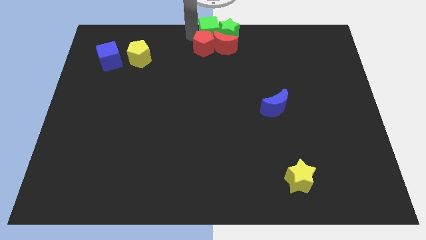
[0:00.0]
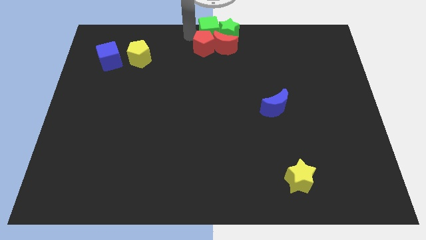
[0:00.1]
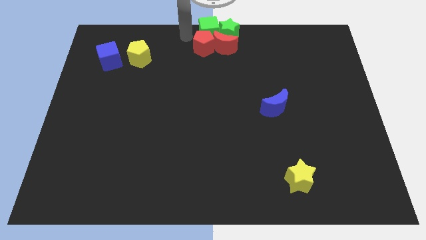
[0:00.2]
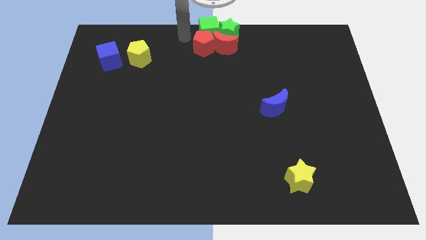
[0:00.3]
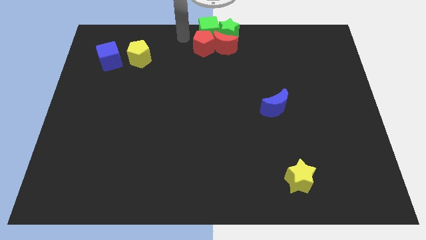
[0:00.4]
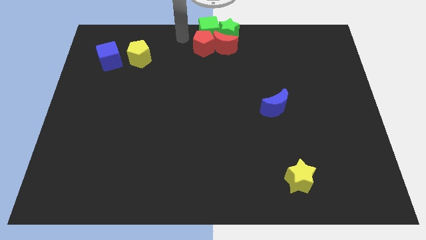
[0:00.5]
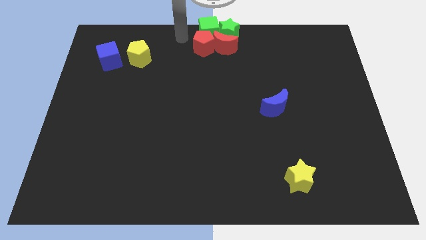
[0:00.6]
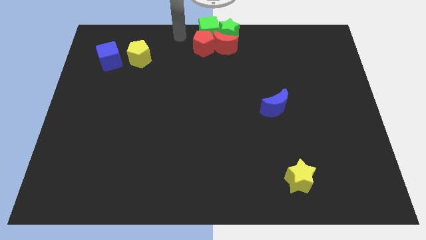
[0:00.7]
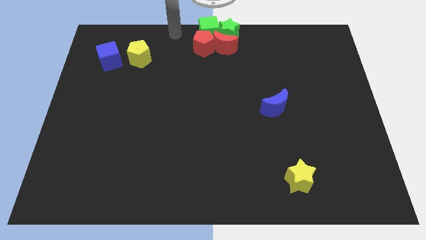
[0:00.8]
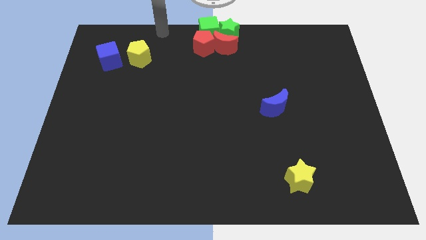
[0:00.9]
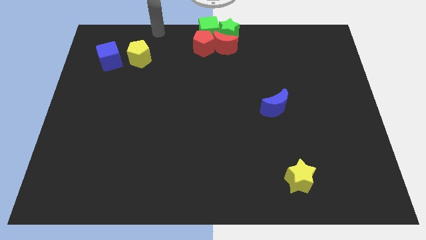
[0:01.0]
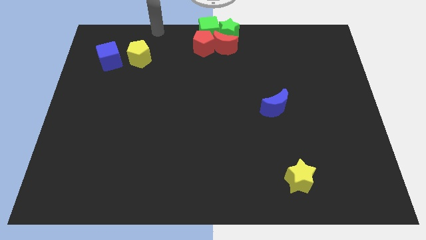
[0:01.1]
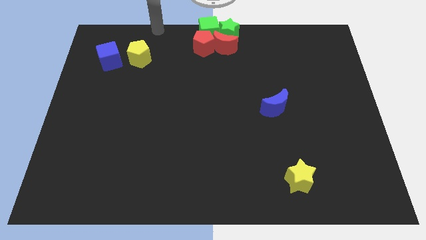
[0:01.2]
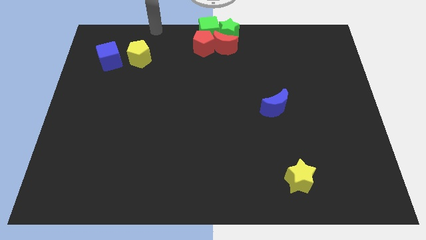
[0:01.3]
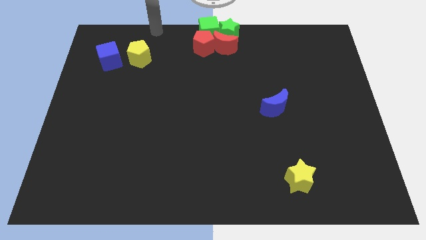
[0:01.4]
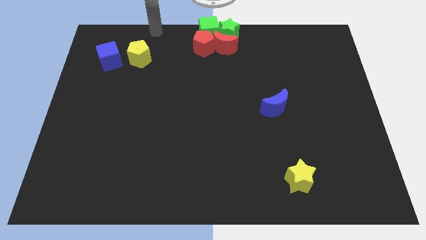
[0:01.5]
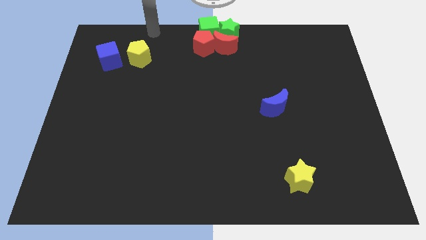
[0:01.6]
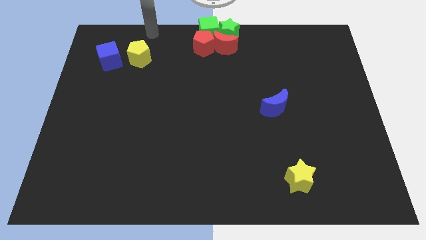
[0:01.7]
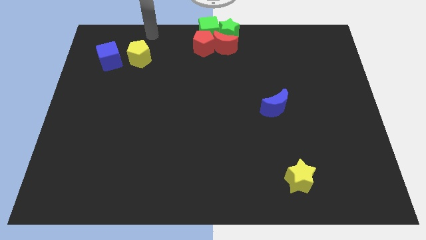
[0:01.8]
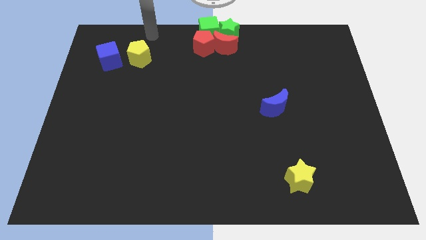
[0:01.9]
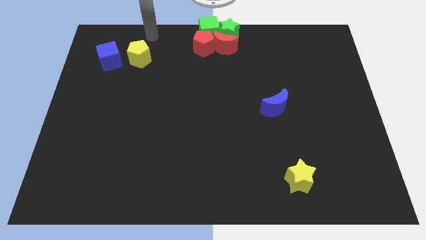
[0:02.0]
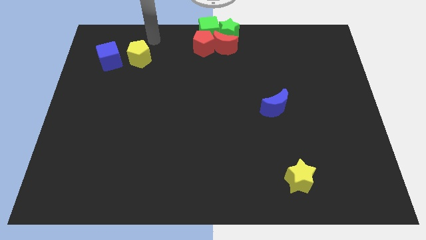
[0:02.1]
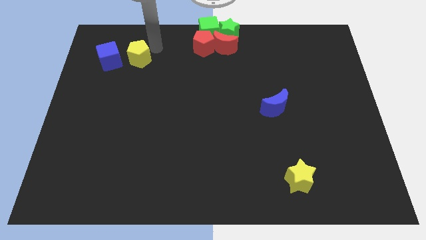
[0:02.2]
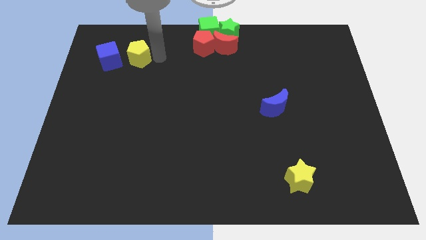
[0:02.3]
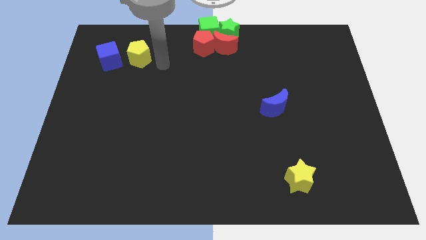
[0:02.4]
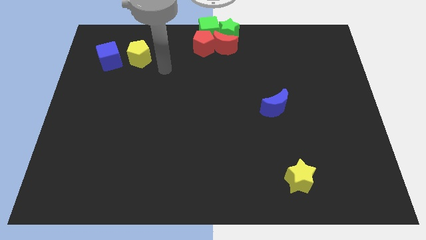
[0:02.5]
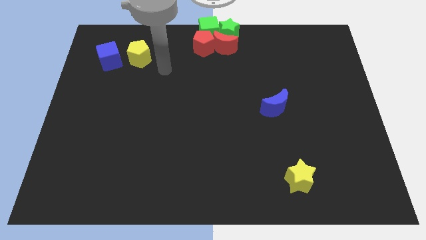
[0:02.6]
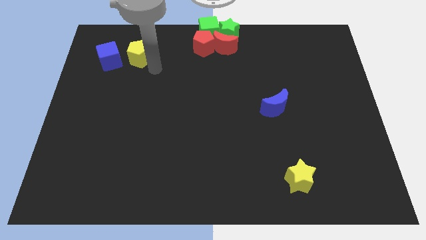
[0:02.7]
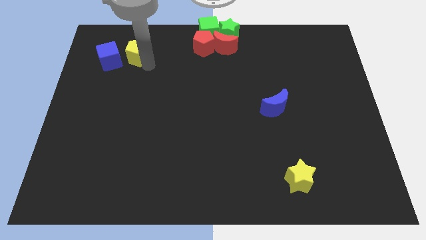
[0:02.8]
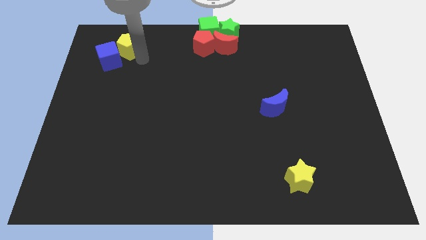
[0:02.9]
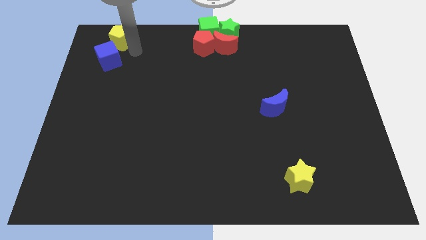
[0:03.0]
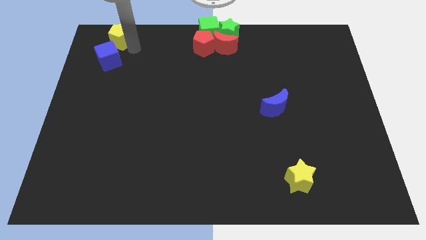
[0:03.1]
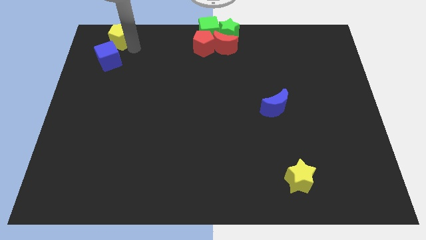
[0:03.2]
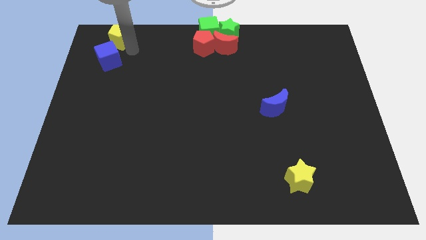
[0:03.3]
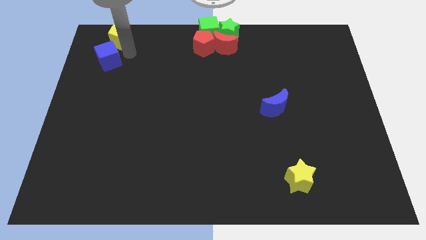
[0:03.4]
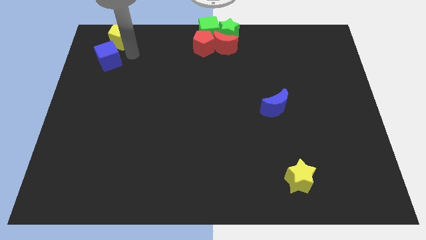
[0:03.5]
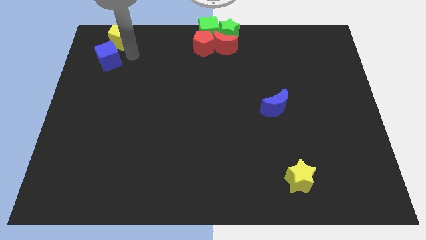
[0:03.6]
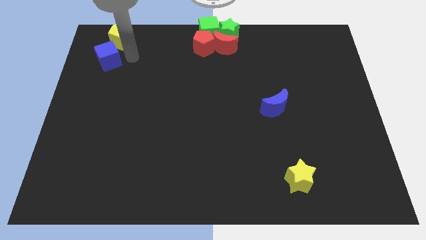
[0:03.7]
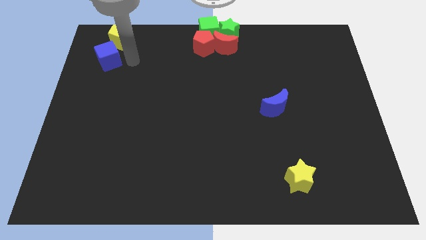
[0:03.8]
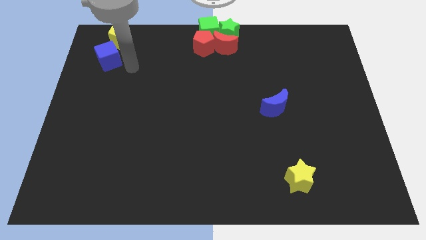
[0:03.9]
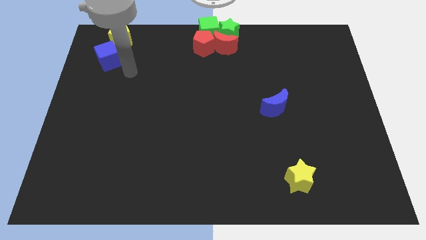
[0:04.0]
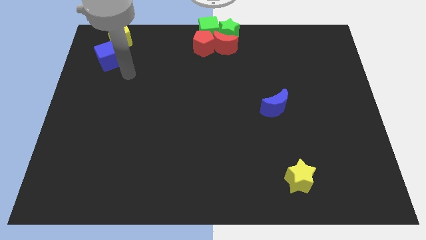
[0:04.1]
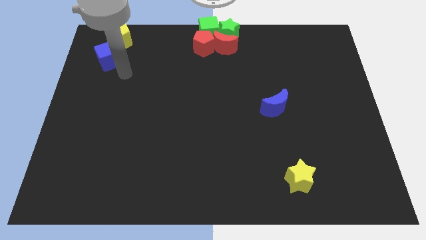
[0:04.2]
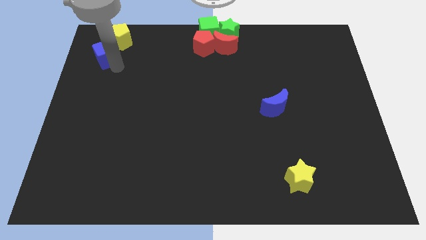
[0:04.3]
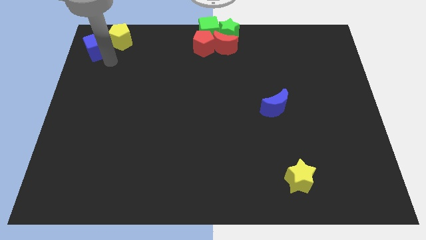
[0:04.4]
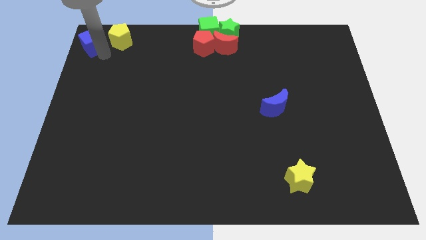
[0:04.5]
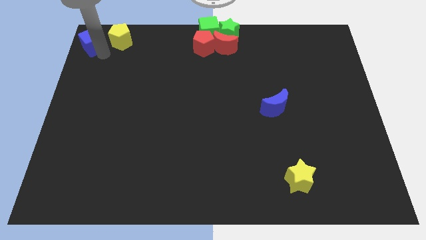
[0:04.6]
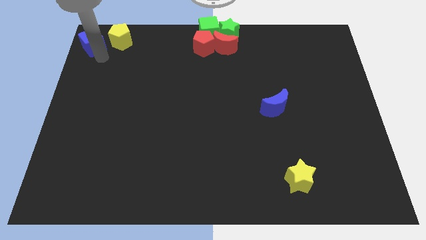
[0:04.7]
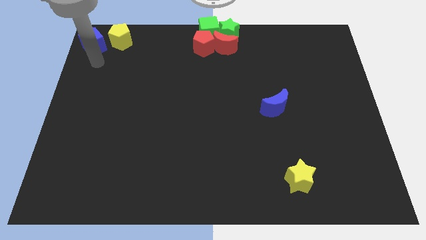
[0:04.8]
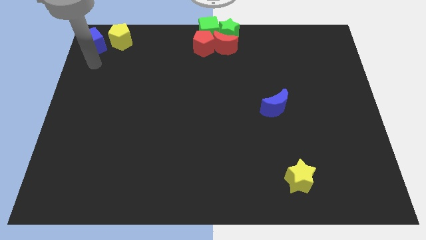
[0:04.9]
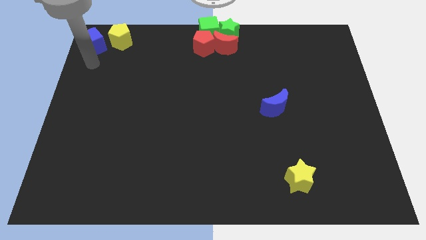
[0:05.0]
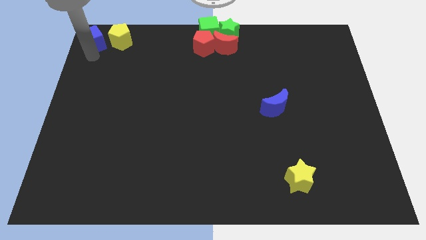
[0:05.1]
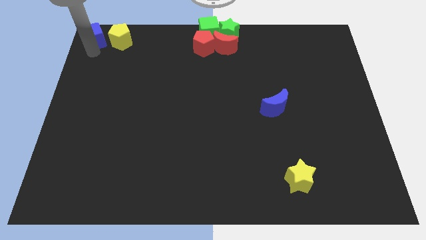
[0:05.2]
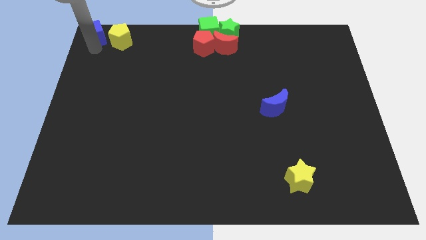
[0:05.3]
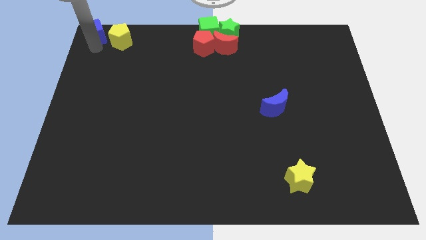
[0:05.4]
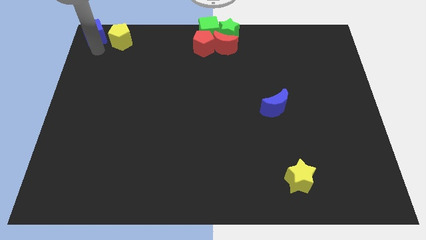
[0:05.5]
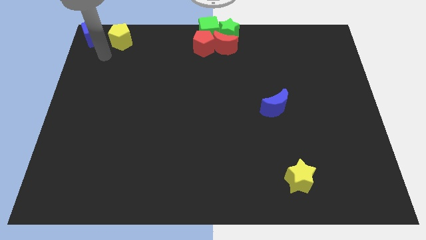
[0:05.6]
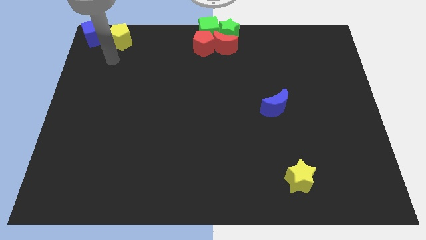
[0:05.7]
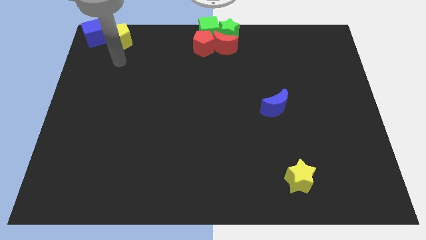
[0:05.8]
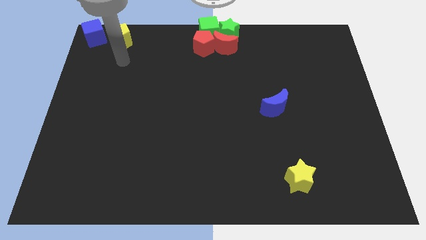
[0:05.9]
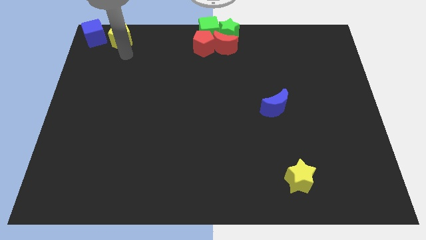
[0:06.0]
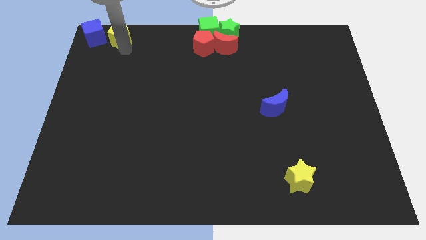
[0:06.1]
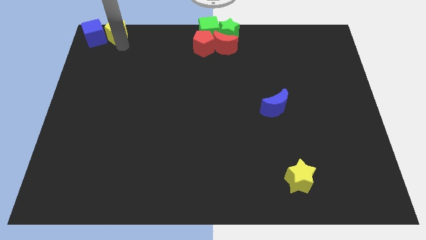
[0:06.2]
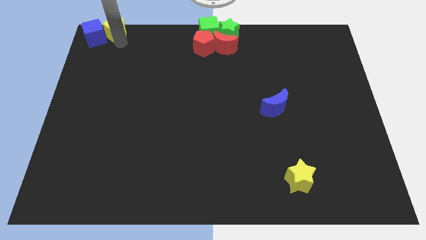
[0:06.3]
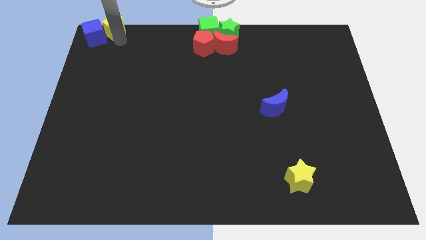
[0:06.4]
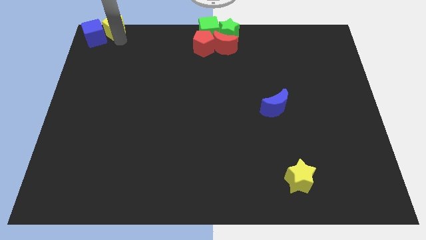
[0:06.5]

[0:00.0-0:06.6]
push the yellow pentagon and blue cube to the top left of the board

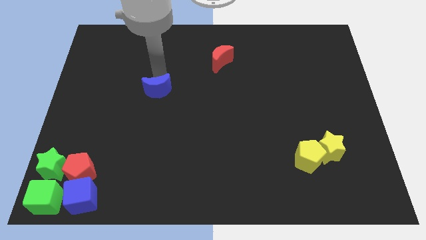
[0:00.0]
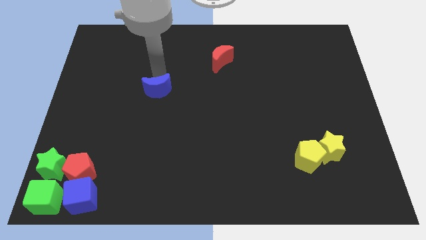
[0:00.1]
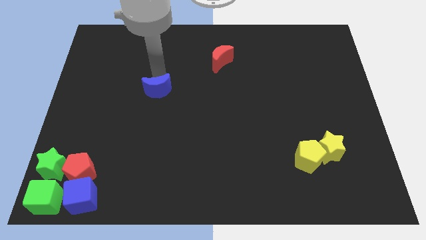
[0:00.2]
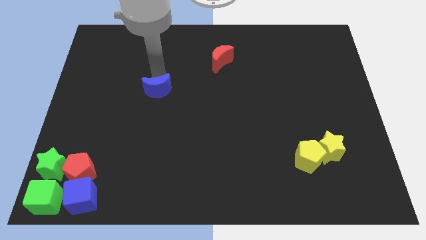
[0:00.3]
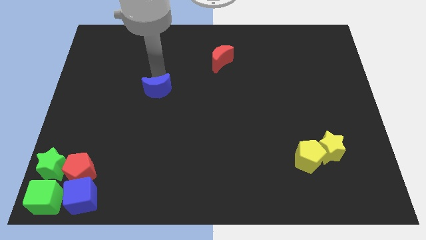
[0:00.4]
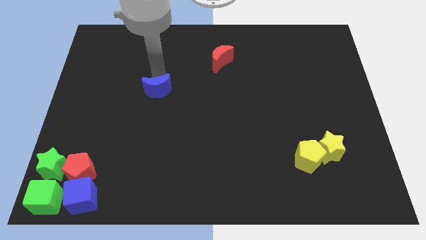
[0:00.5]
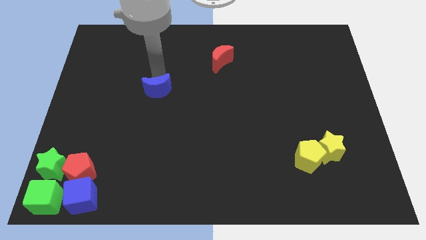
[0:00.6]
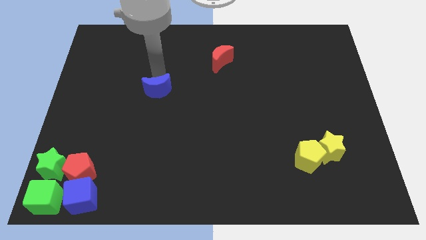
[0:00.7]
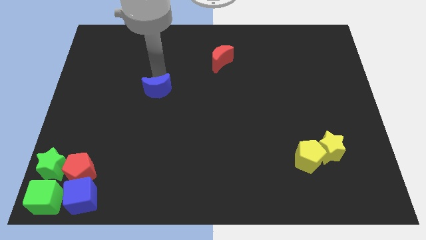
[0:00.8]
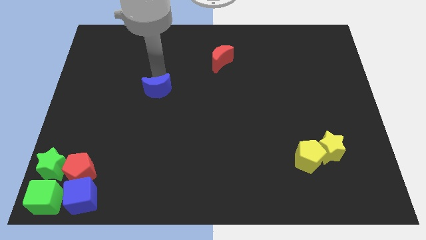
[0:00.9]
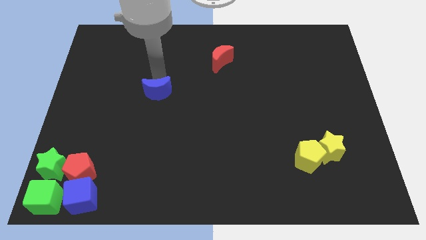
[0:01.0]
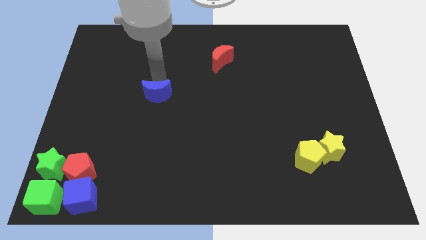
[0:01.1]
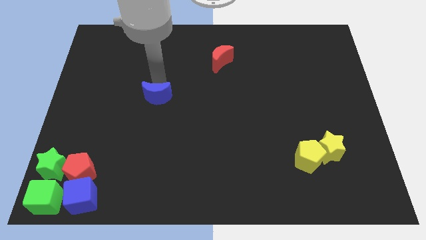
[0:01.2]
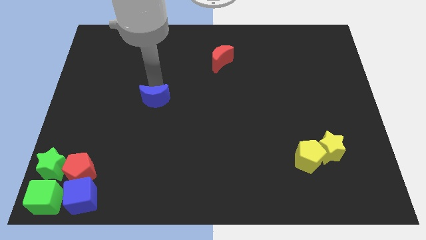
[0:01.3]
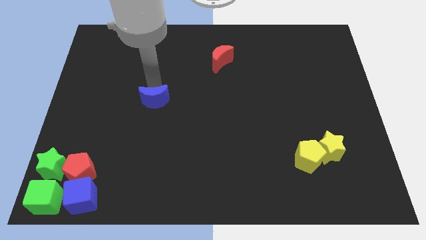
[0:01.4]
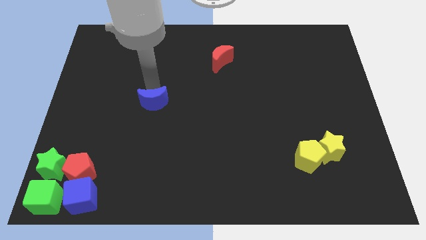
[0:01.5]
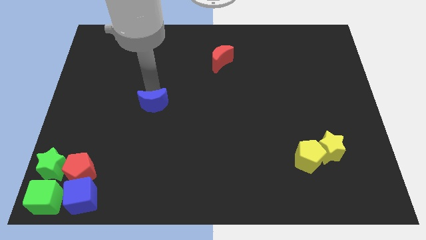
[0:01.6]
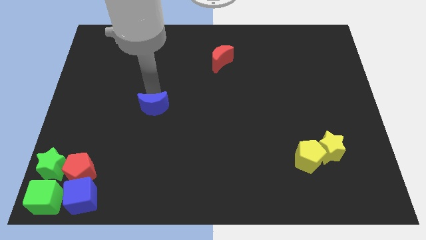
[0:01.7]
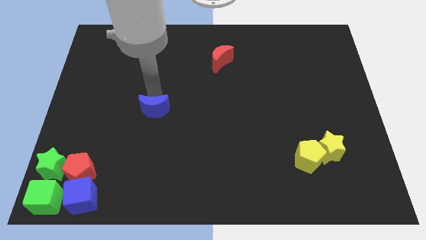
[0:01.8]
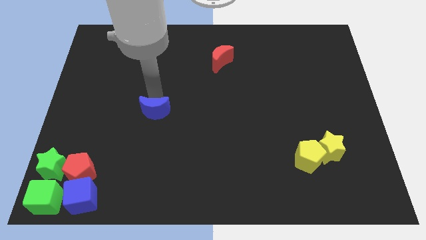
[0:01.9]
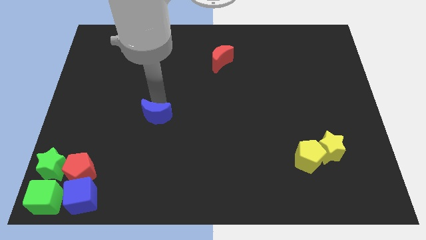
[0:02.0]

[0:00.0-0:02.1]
place the blue moon diagonally in between the red moon and red pentagon

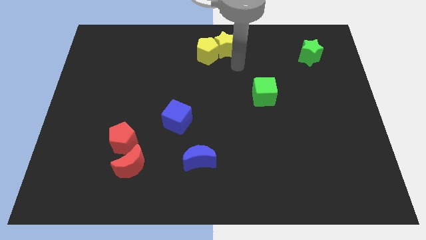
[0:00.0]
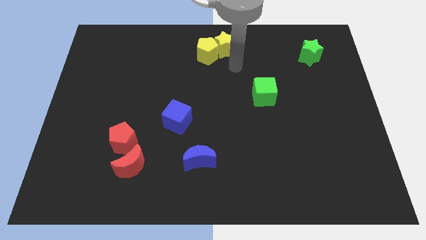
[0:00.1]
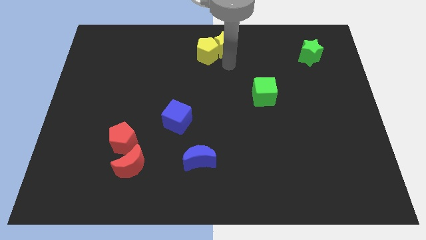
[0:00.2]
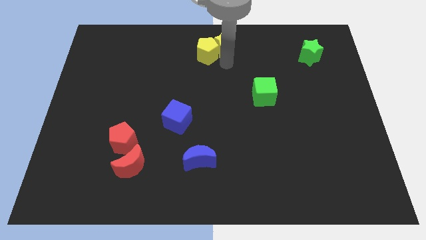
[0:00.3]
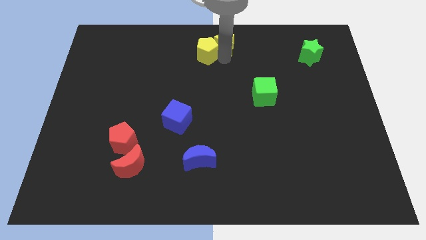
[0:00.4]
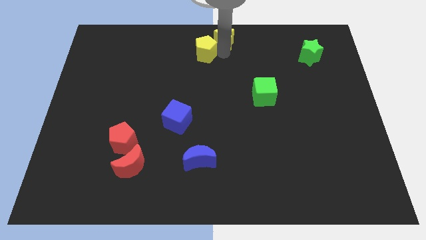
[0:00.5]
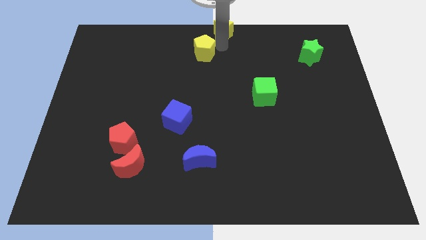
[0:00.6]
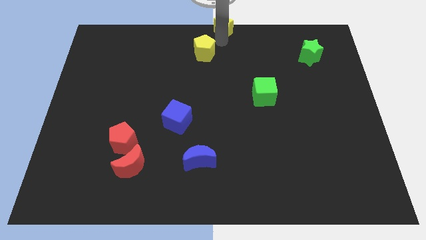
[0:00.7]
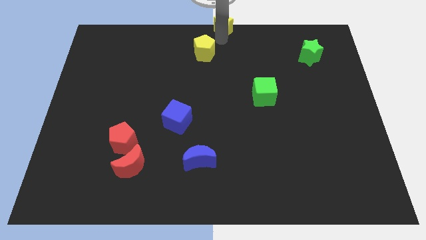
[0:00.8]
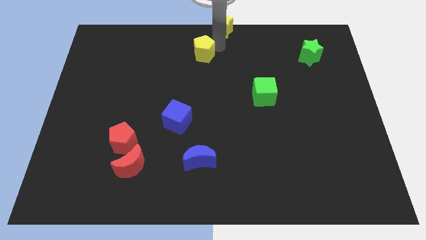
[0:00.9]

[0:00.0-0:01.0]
push the yellow star to the top center of the board
